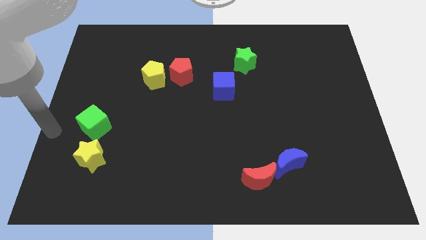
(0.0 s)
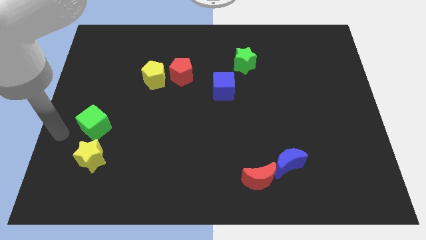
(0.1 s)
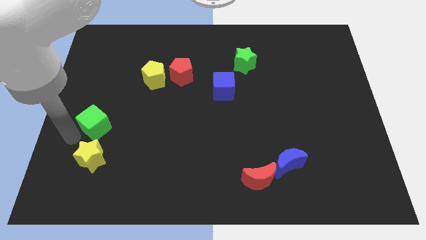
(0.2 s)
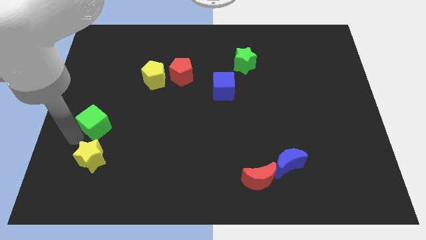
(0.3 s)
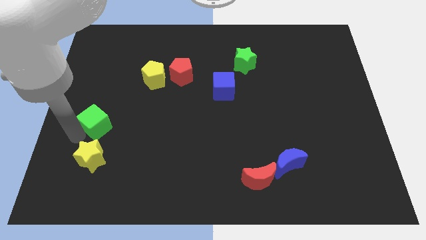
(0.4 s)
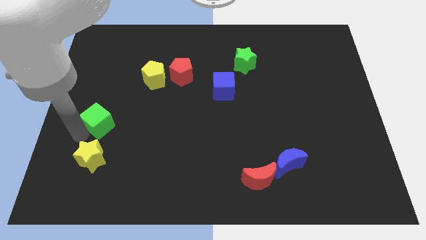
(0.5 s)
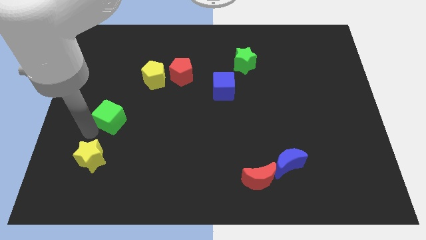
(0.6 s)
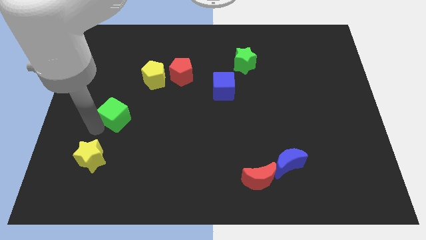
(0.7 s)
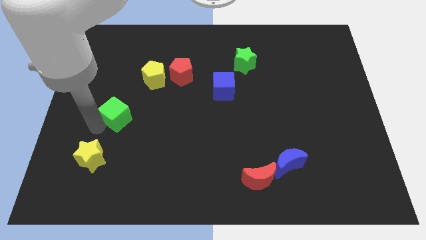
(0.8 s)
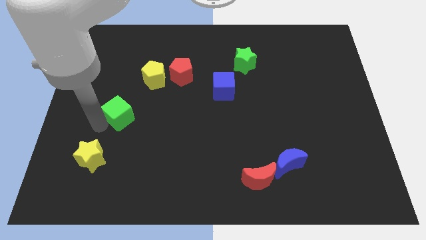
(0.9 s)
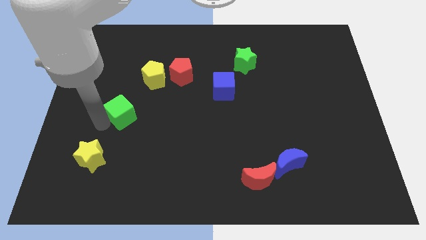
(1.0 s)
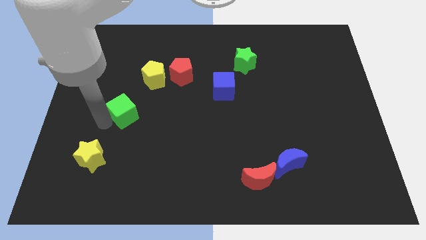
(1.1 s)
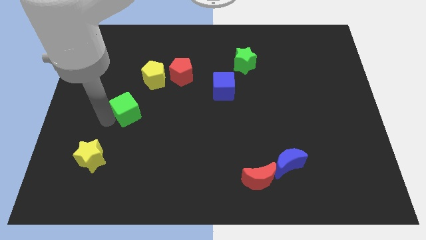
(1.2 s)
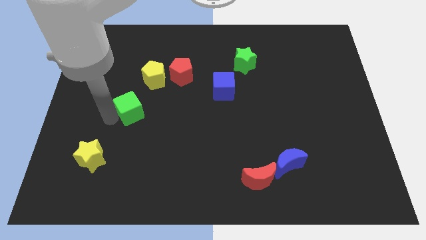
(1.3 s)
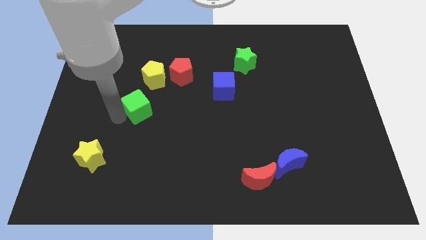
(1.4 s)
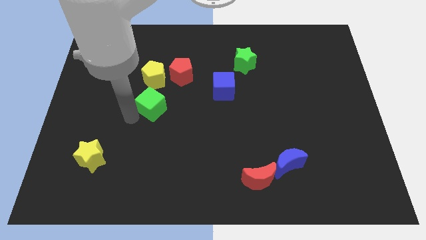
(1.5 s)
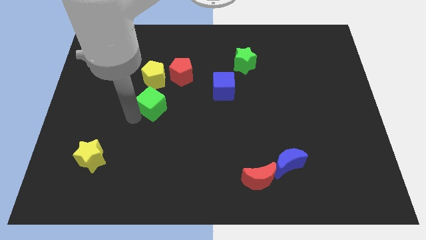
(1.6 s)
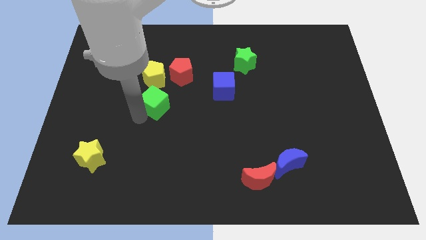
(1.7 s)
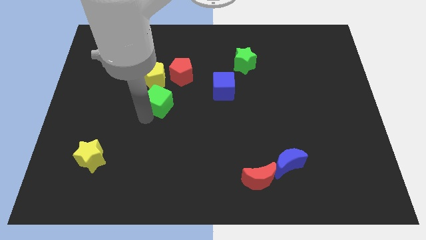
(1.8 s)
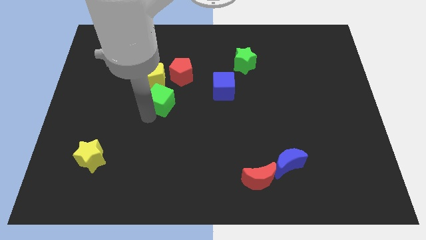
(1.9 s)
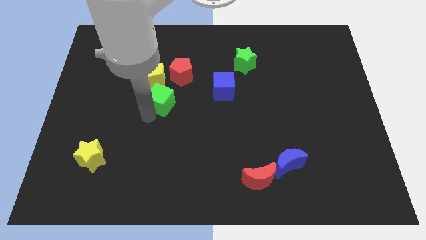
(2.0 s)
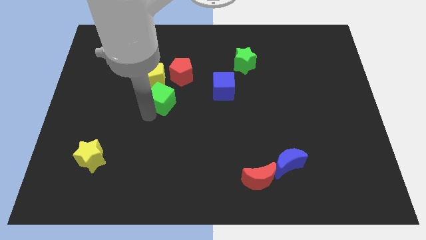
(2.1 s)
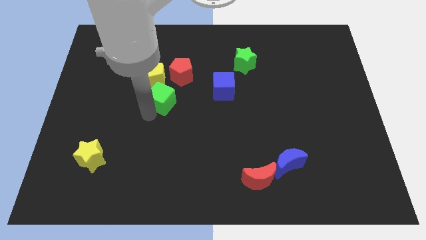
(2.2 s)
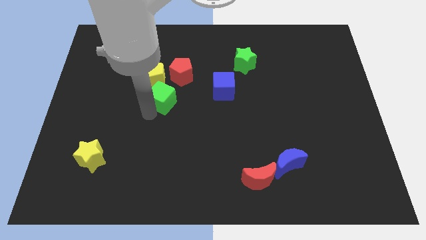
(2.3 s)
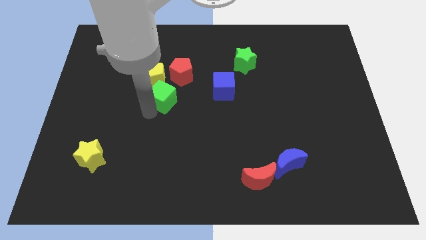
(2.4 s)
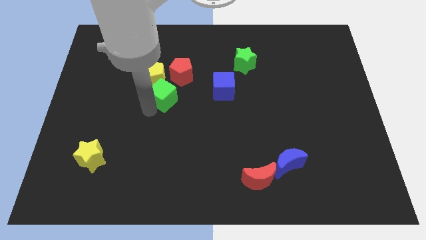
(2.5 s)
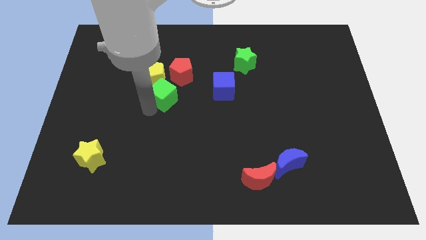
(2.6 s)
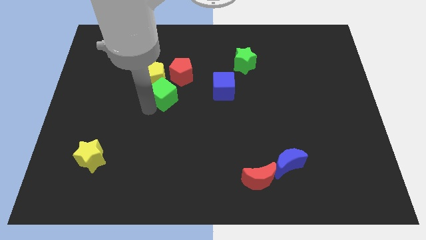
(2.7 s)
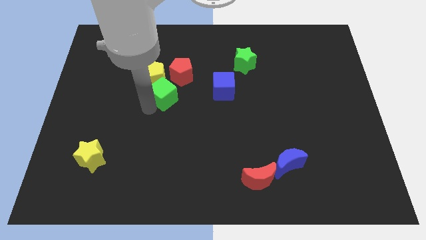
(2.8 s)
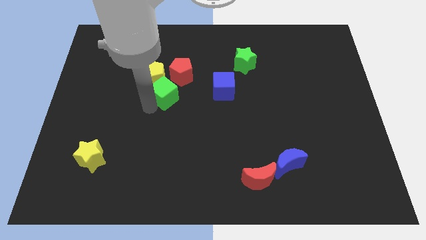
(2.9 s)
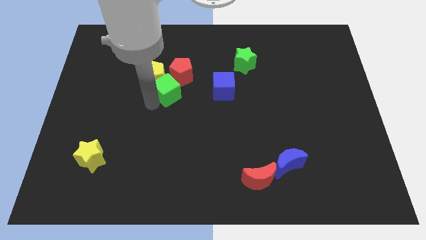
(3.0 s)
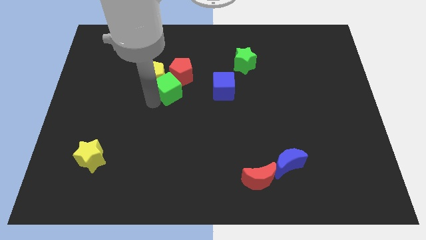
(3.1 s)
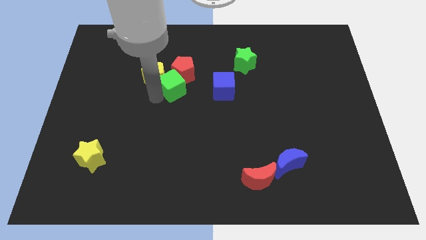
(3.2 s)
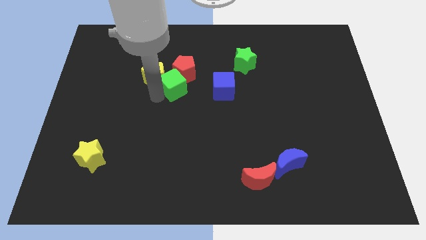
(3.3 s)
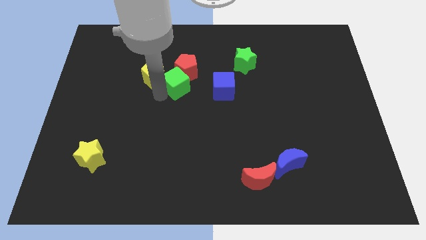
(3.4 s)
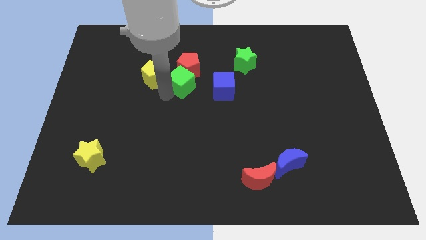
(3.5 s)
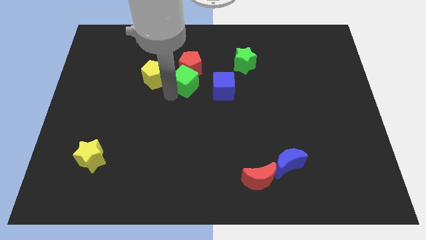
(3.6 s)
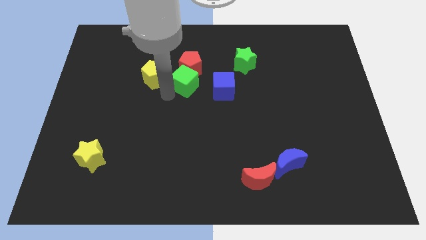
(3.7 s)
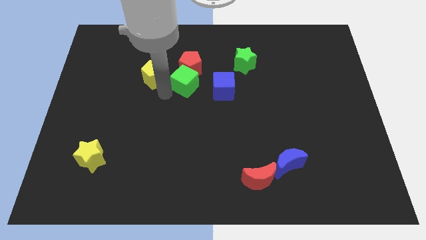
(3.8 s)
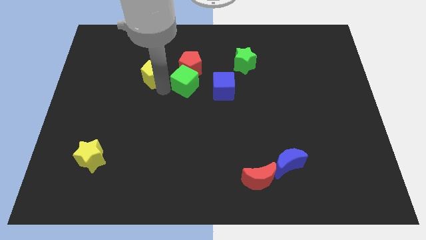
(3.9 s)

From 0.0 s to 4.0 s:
push the green cube into red pentagon

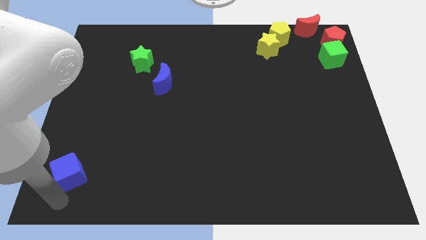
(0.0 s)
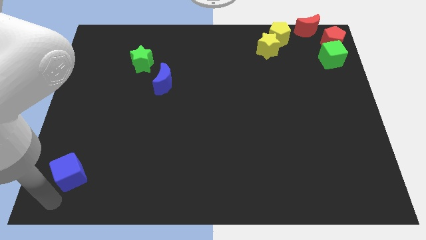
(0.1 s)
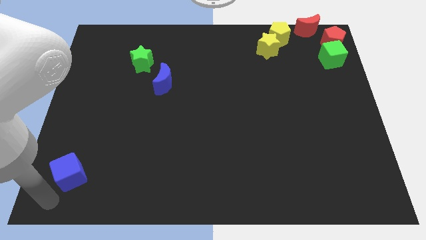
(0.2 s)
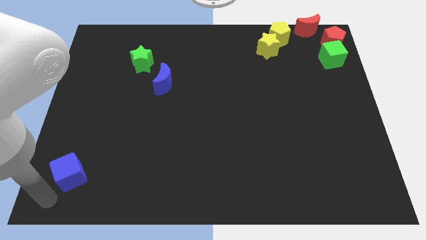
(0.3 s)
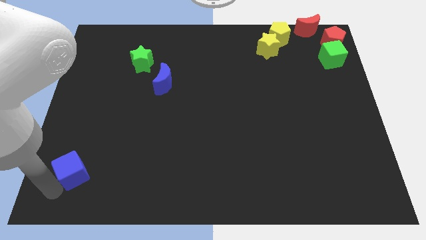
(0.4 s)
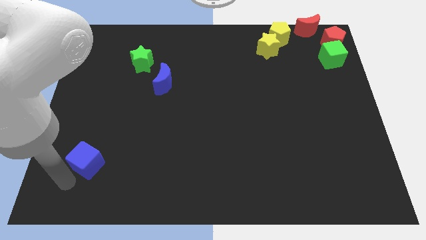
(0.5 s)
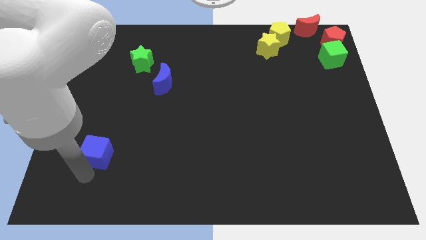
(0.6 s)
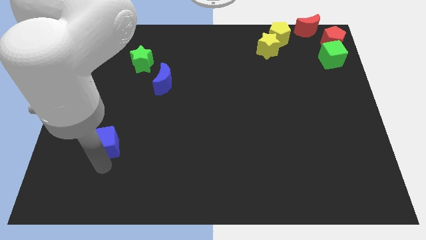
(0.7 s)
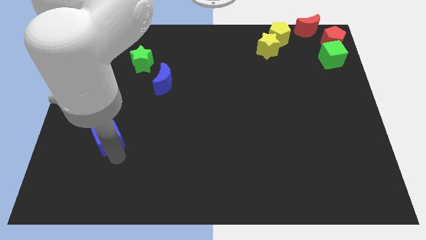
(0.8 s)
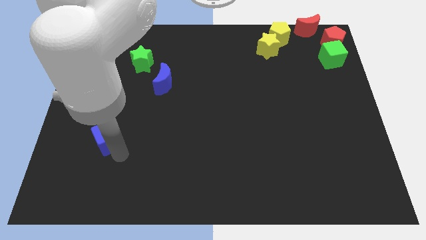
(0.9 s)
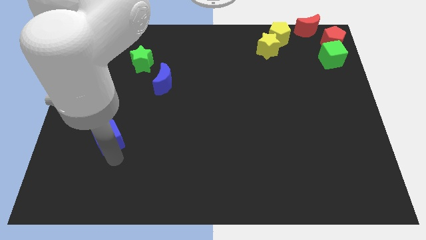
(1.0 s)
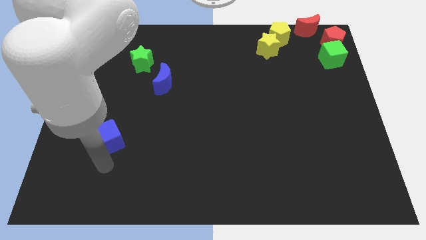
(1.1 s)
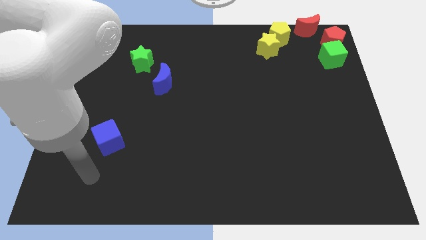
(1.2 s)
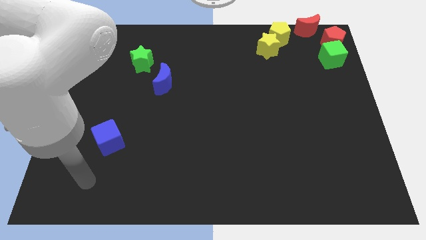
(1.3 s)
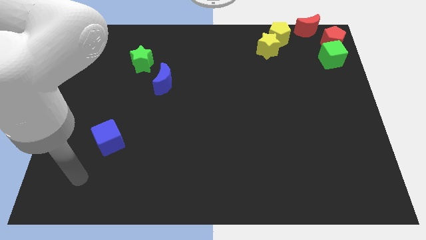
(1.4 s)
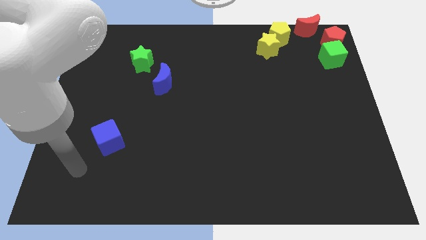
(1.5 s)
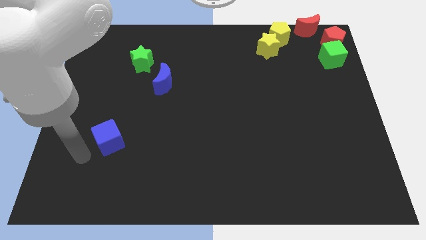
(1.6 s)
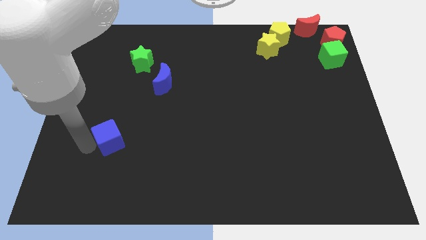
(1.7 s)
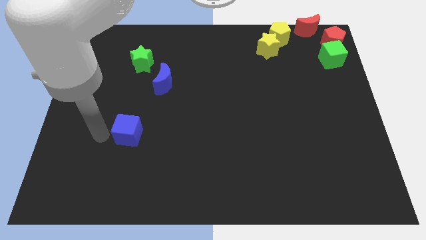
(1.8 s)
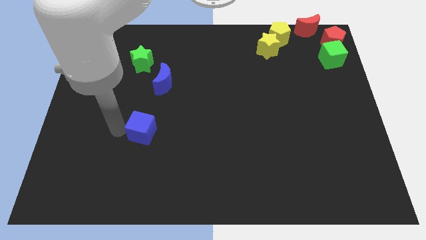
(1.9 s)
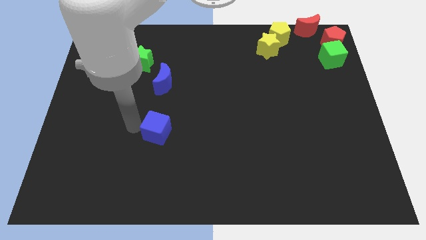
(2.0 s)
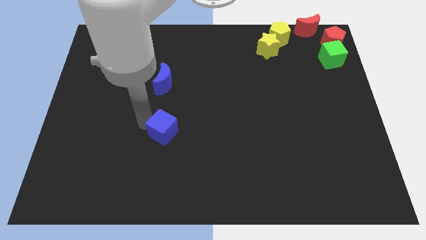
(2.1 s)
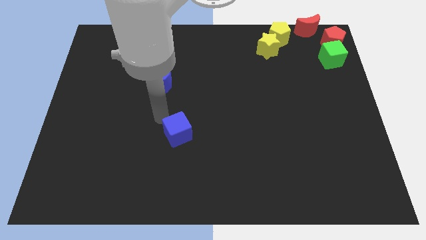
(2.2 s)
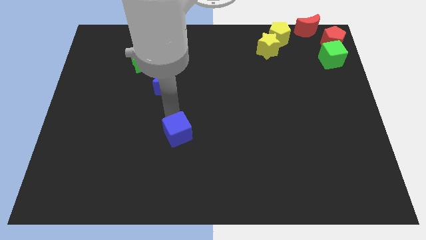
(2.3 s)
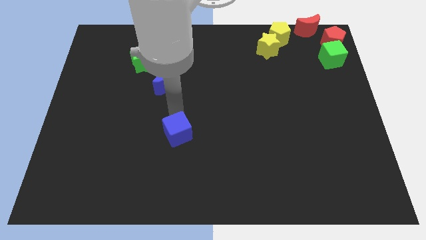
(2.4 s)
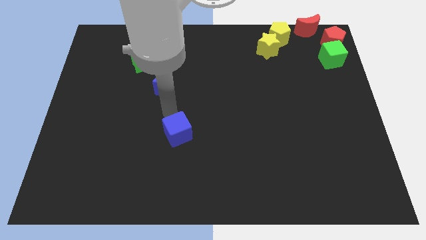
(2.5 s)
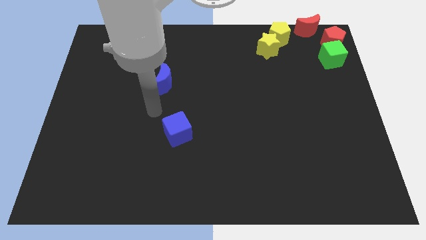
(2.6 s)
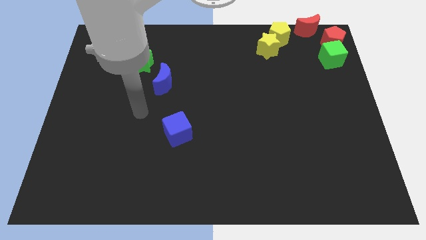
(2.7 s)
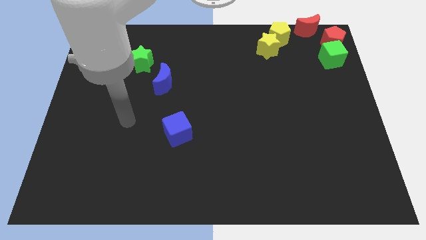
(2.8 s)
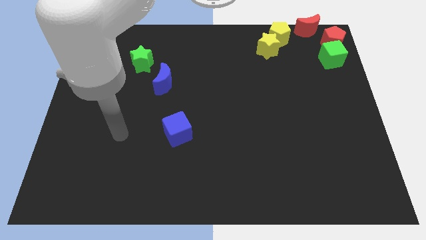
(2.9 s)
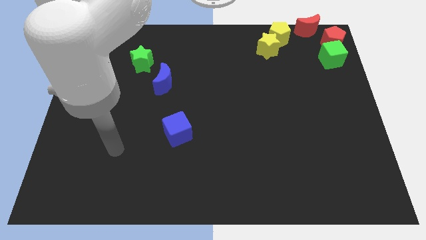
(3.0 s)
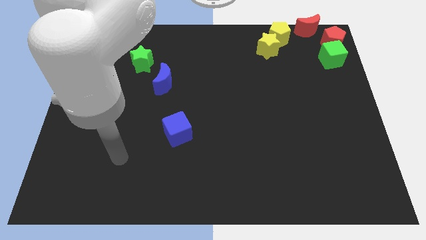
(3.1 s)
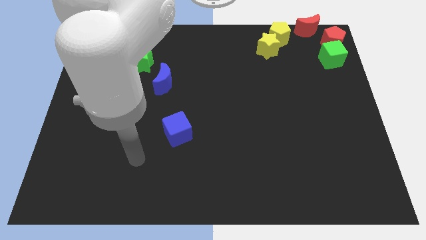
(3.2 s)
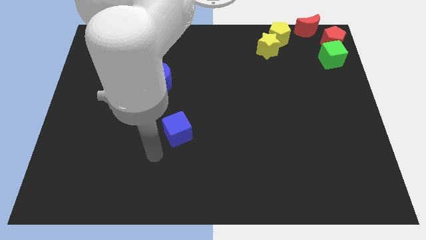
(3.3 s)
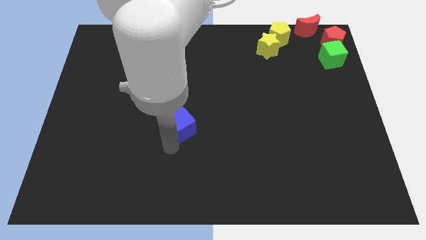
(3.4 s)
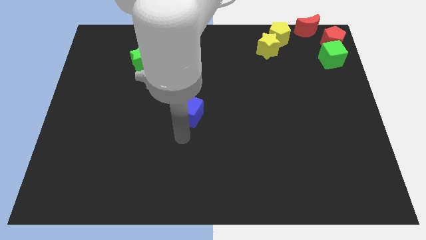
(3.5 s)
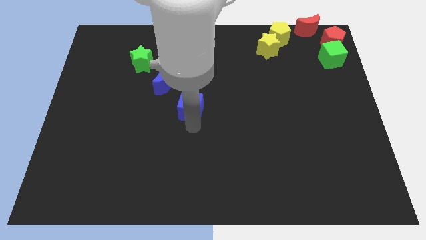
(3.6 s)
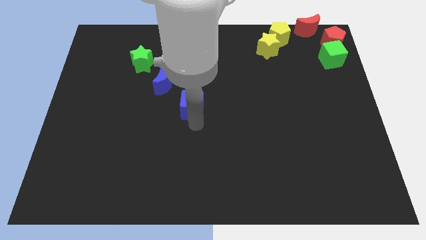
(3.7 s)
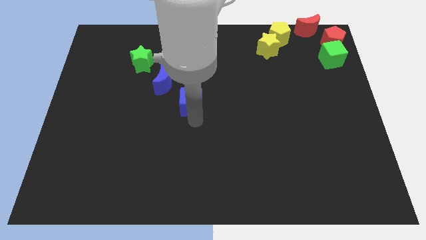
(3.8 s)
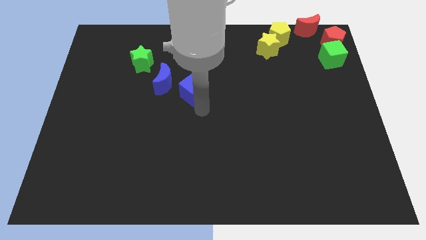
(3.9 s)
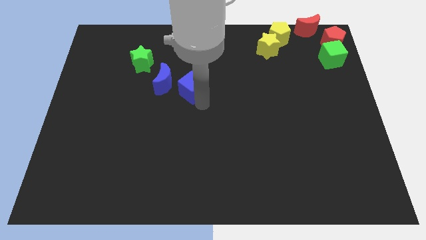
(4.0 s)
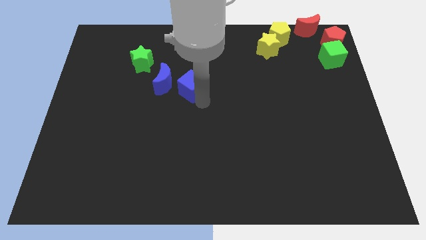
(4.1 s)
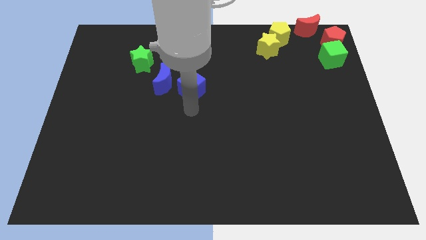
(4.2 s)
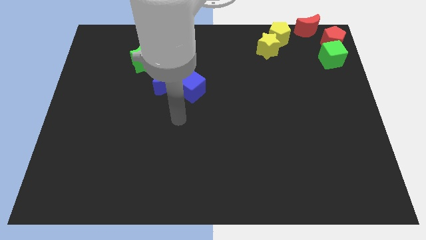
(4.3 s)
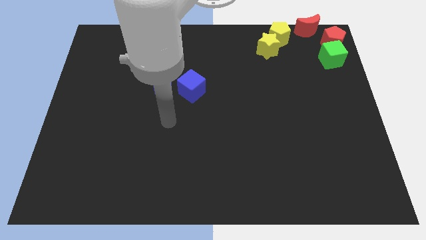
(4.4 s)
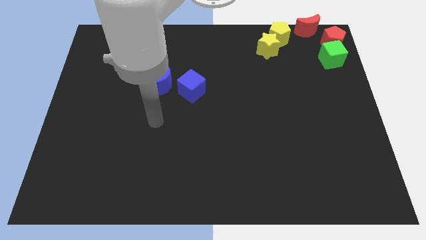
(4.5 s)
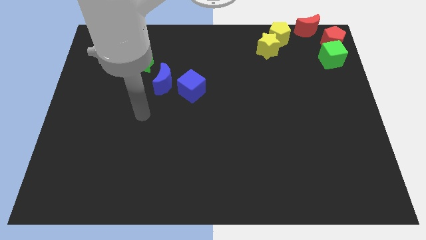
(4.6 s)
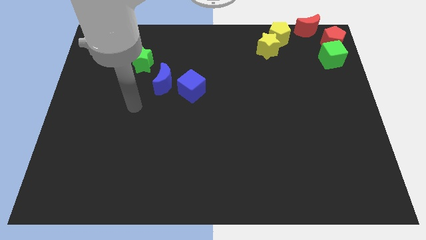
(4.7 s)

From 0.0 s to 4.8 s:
move blue cube to the right of blue moon

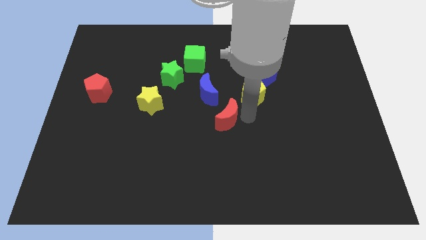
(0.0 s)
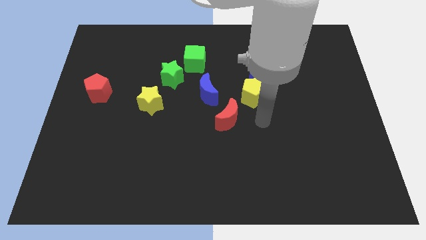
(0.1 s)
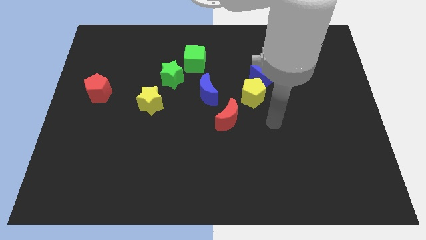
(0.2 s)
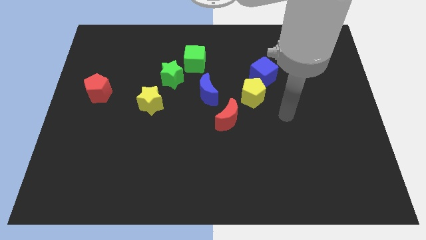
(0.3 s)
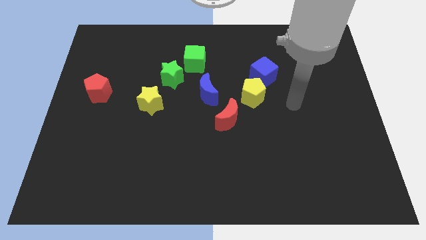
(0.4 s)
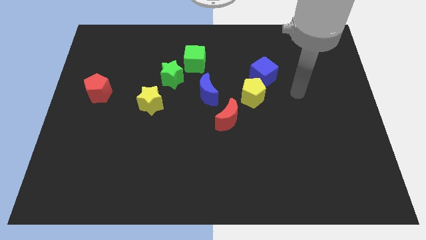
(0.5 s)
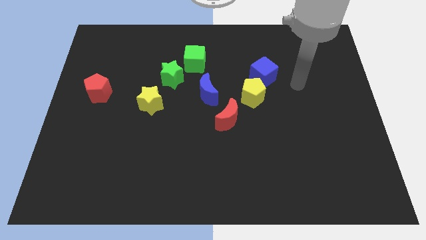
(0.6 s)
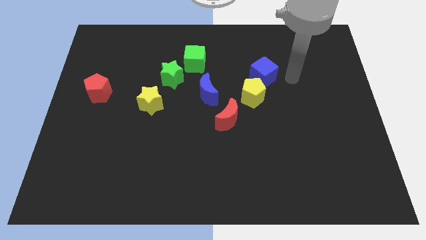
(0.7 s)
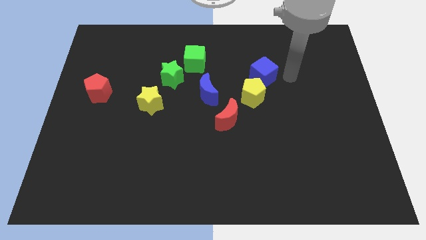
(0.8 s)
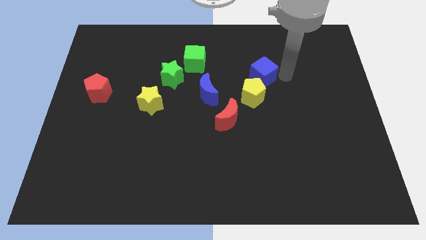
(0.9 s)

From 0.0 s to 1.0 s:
place the arm right to the blue cube
